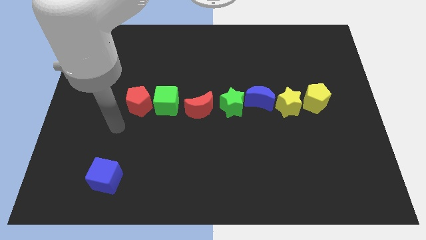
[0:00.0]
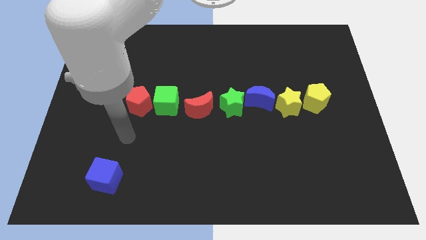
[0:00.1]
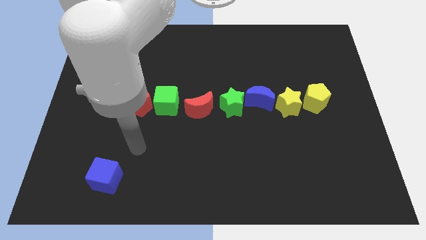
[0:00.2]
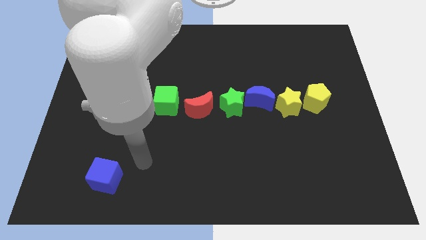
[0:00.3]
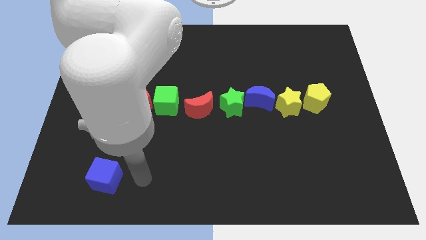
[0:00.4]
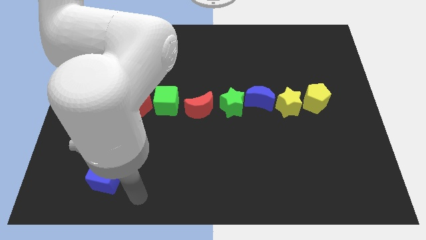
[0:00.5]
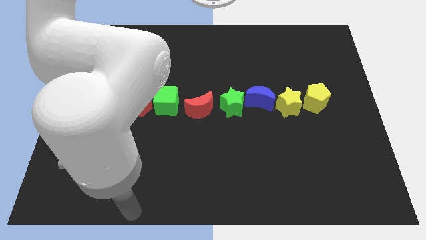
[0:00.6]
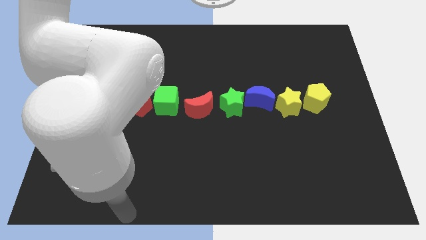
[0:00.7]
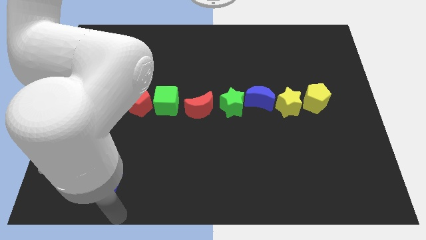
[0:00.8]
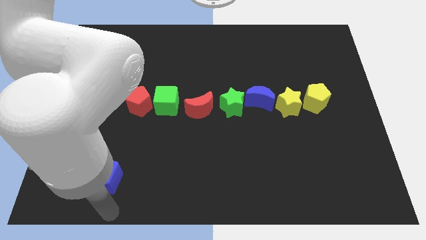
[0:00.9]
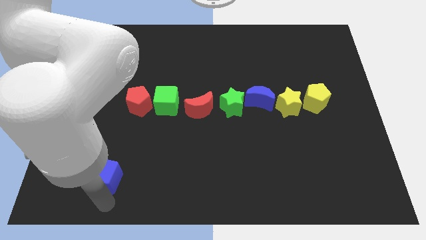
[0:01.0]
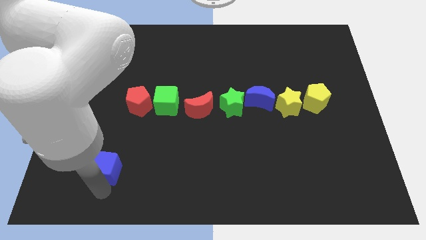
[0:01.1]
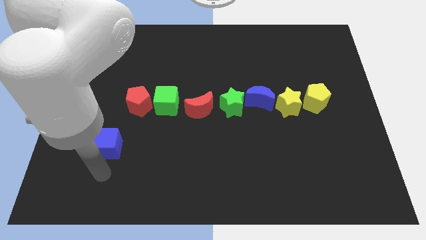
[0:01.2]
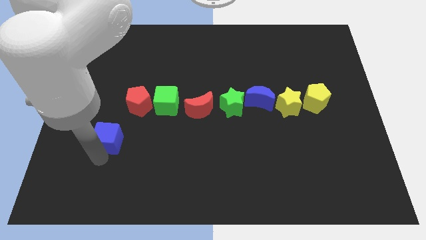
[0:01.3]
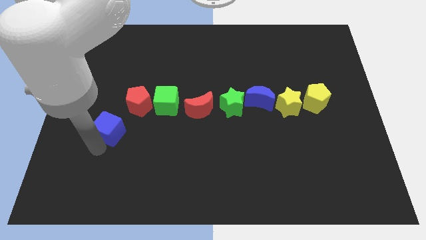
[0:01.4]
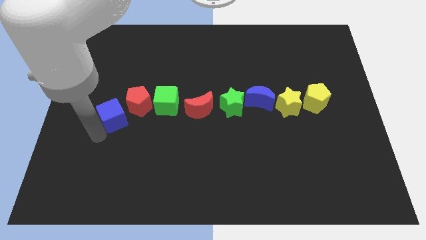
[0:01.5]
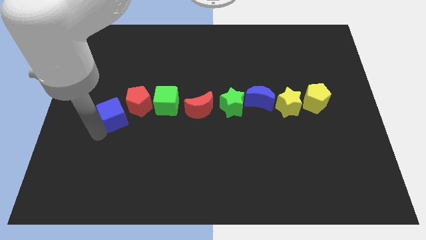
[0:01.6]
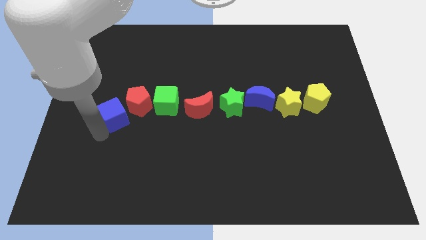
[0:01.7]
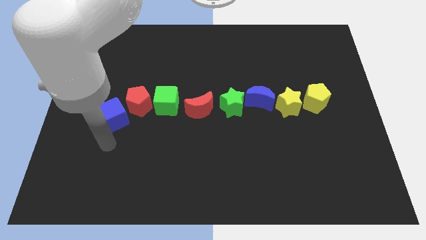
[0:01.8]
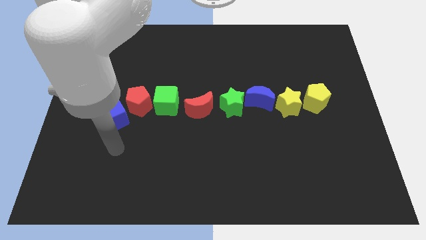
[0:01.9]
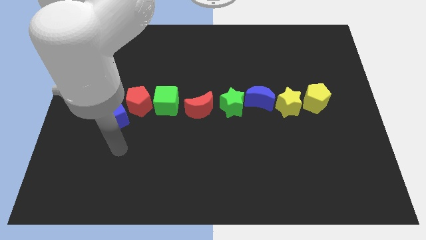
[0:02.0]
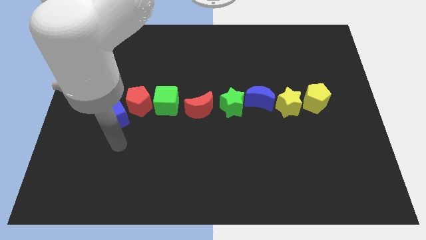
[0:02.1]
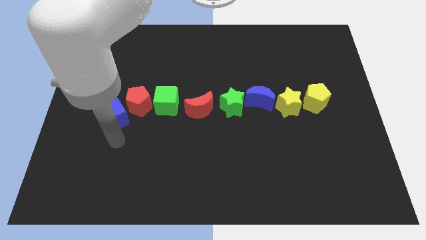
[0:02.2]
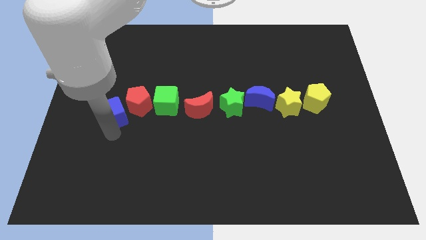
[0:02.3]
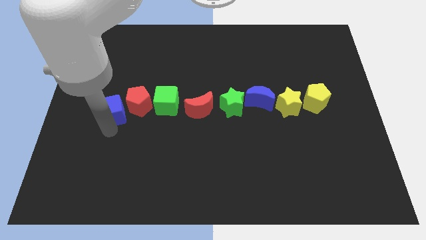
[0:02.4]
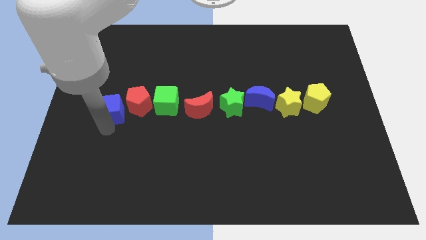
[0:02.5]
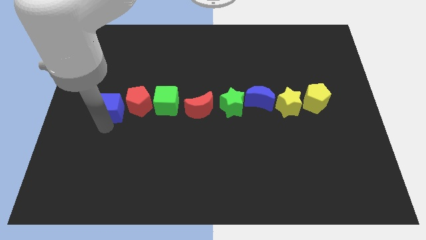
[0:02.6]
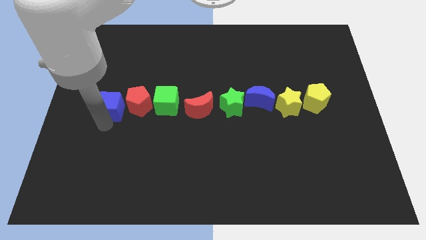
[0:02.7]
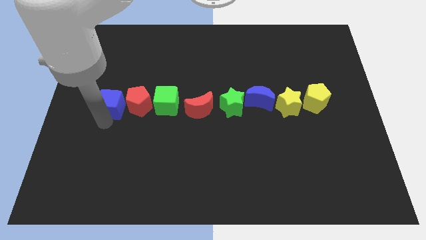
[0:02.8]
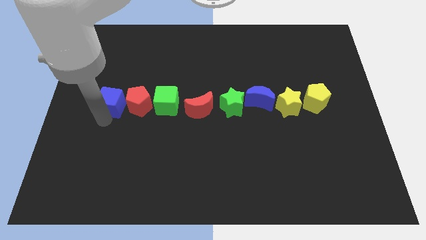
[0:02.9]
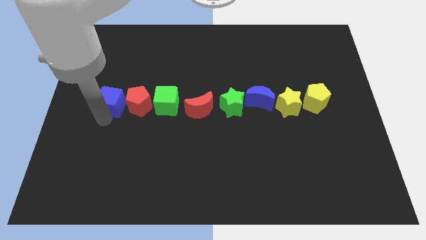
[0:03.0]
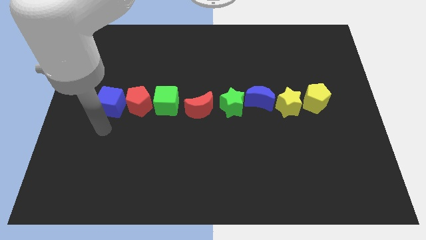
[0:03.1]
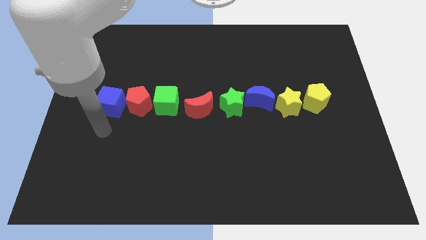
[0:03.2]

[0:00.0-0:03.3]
push blue cube beside red crescent

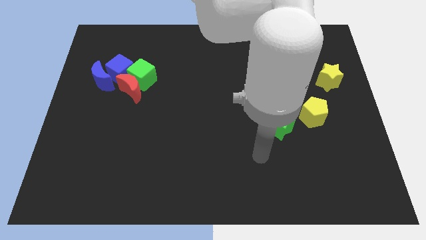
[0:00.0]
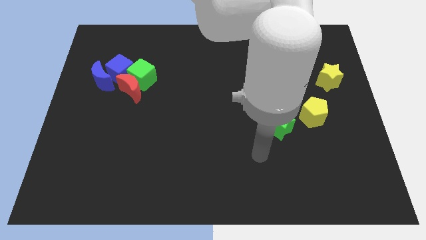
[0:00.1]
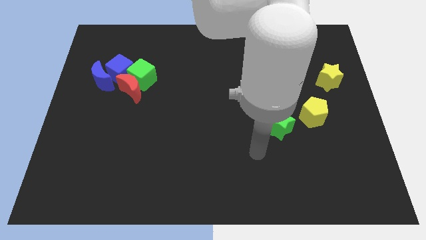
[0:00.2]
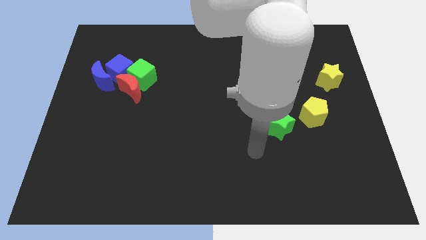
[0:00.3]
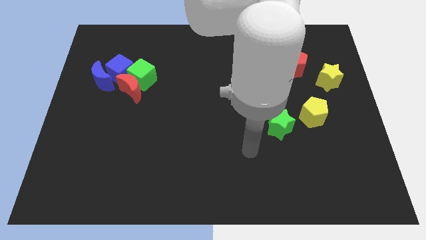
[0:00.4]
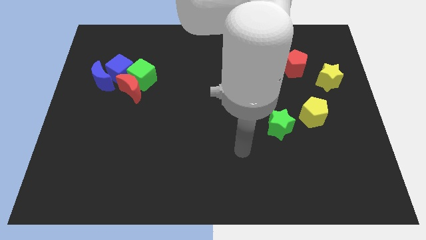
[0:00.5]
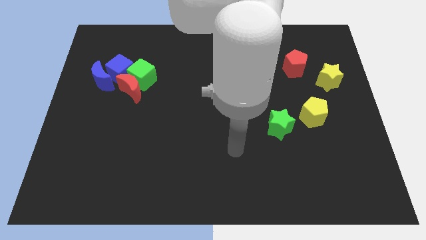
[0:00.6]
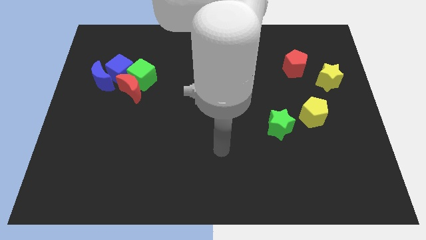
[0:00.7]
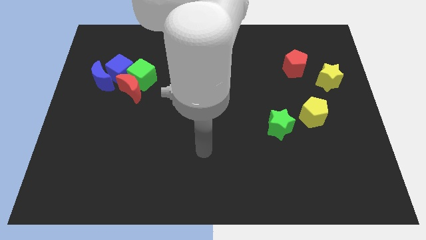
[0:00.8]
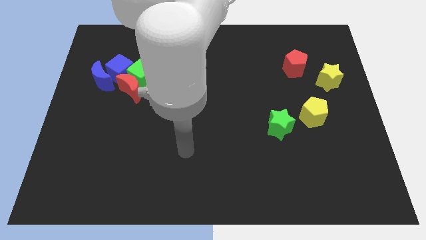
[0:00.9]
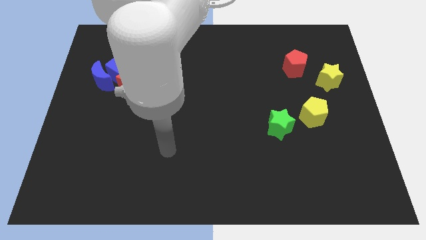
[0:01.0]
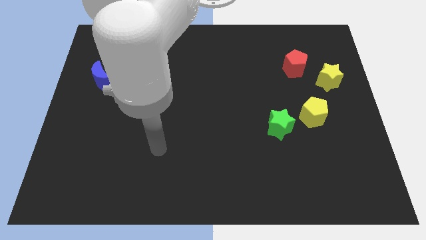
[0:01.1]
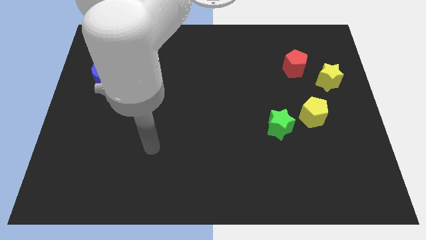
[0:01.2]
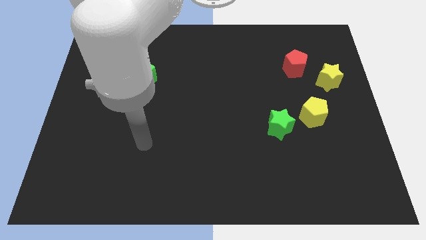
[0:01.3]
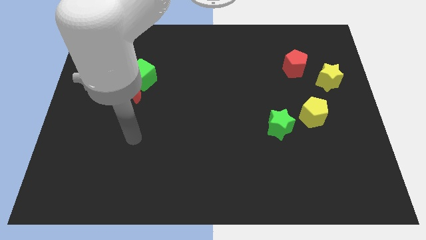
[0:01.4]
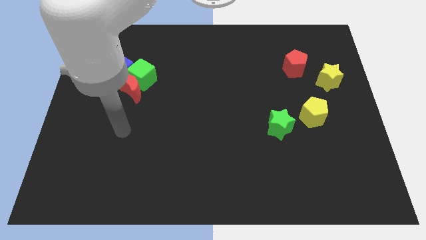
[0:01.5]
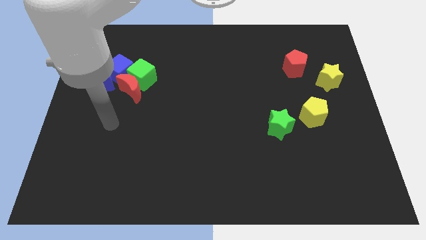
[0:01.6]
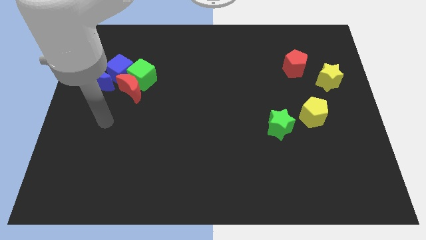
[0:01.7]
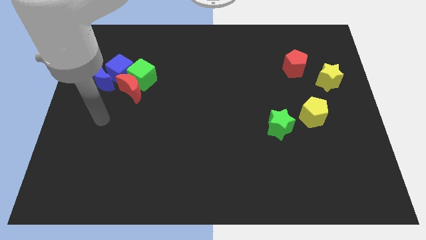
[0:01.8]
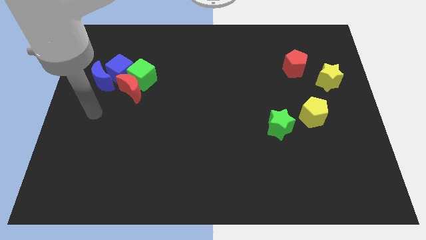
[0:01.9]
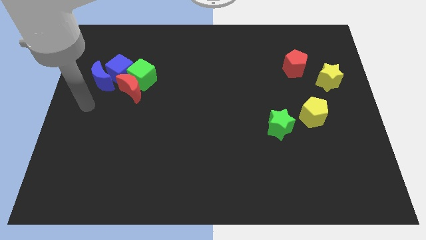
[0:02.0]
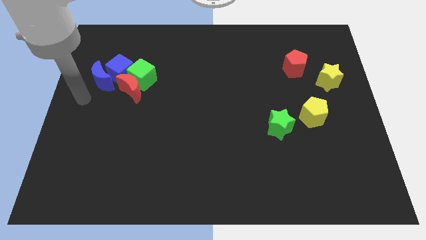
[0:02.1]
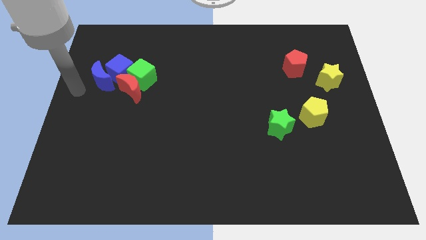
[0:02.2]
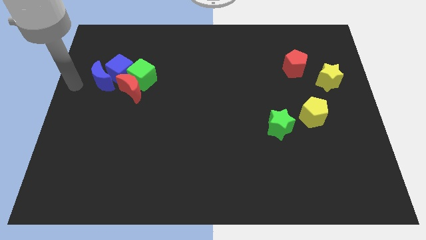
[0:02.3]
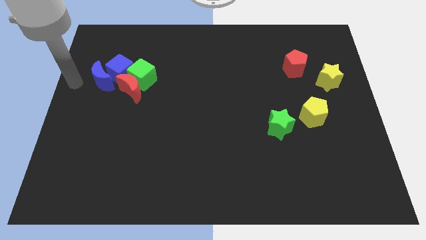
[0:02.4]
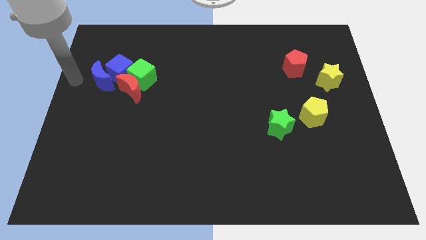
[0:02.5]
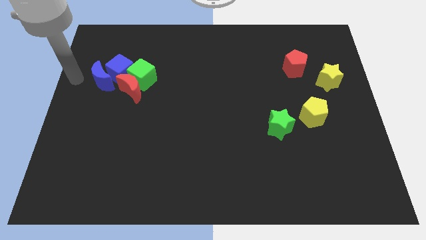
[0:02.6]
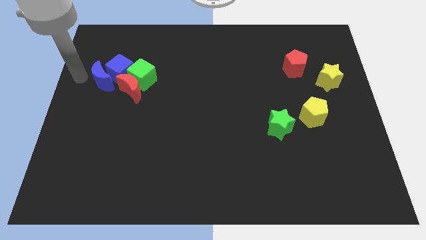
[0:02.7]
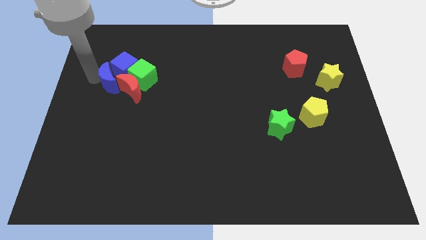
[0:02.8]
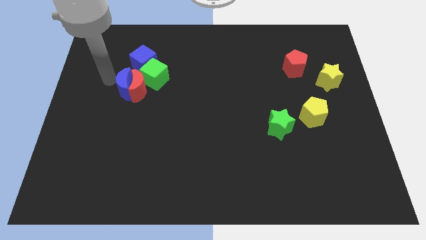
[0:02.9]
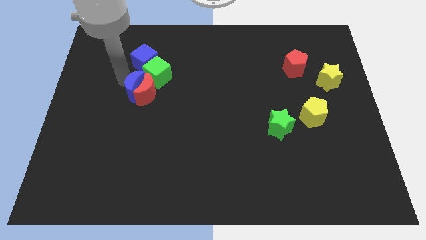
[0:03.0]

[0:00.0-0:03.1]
place the arm to the left of the blue moon

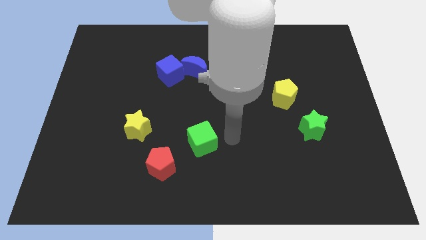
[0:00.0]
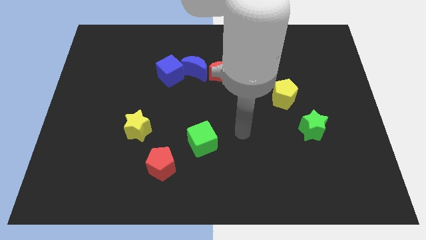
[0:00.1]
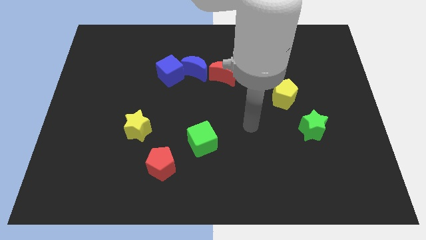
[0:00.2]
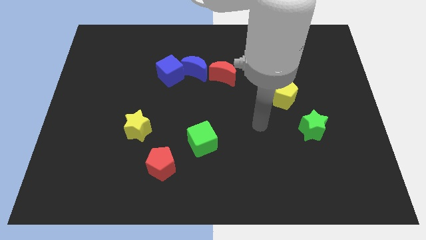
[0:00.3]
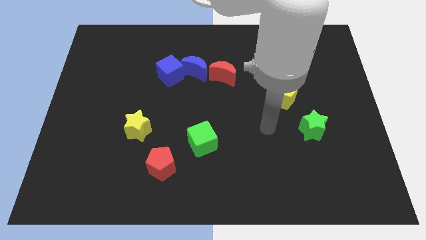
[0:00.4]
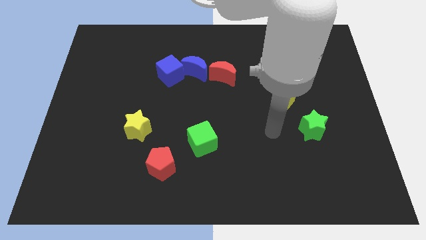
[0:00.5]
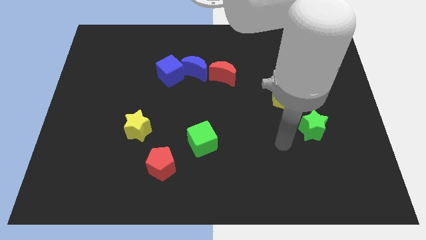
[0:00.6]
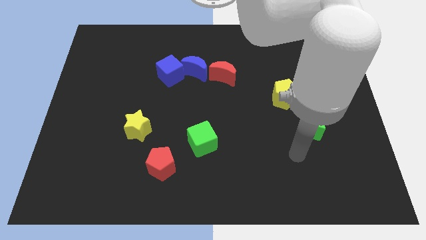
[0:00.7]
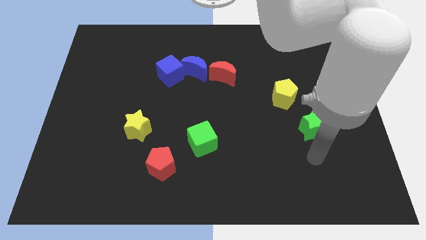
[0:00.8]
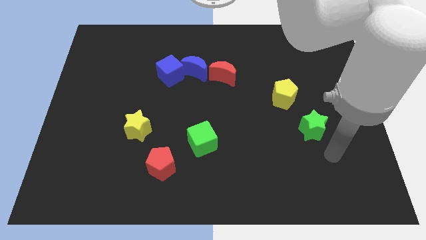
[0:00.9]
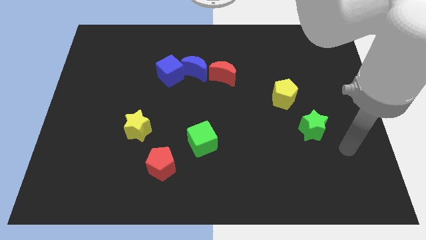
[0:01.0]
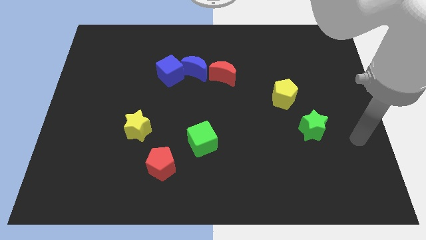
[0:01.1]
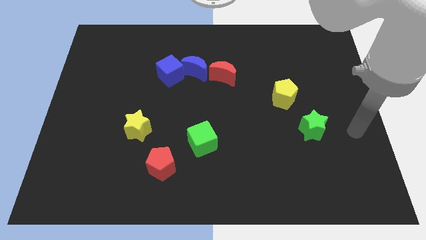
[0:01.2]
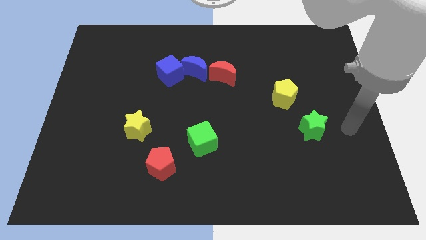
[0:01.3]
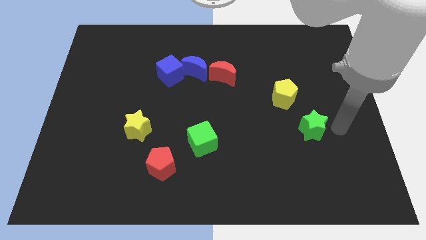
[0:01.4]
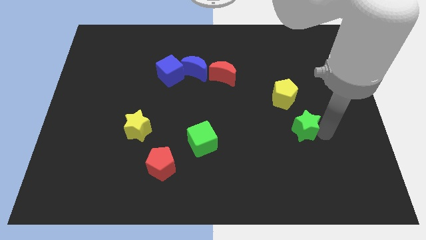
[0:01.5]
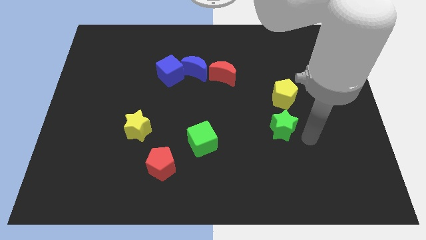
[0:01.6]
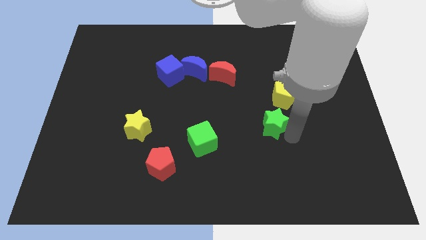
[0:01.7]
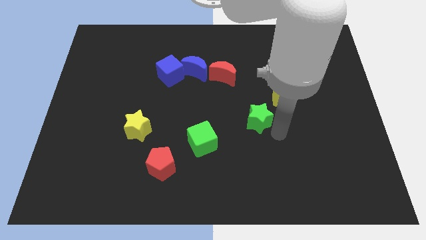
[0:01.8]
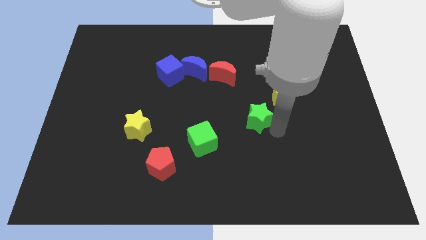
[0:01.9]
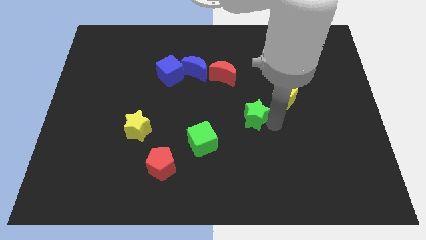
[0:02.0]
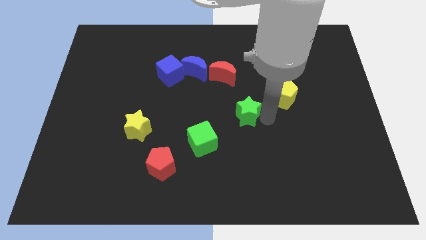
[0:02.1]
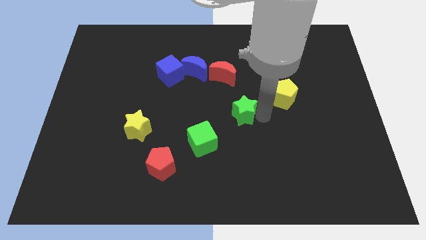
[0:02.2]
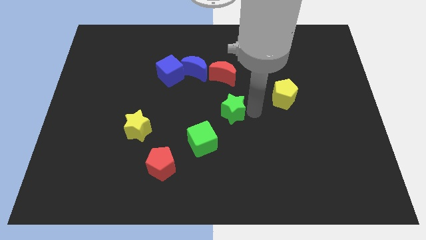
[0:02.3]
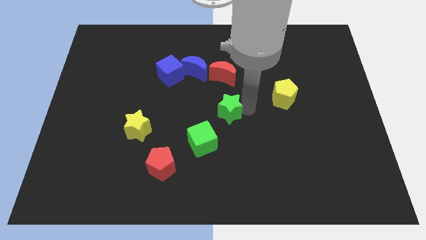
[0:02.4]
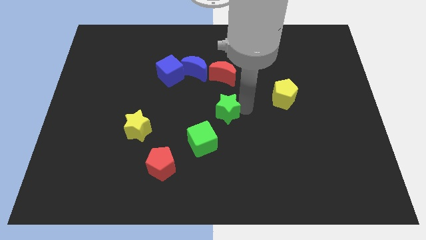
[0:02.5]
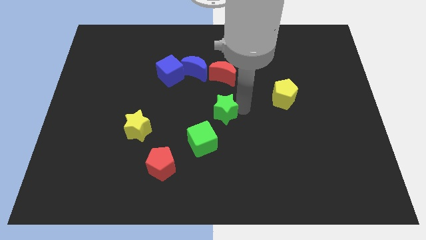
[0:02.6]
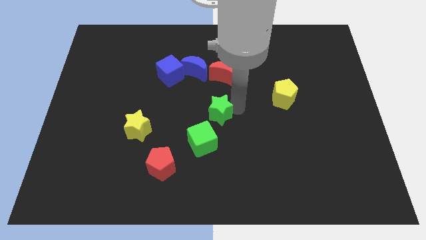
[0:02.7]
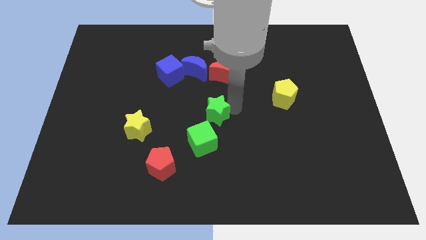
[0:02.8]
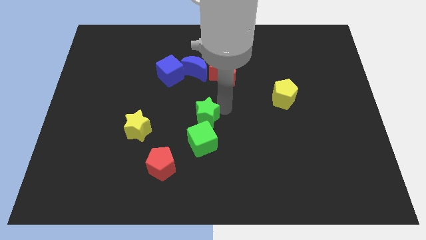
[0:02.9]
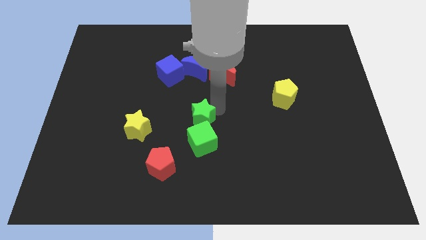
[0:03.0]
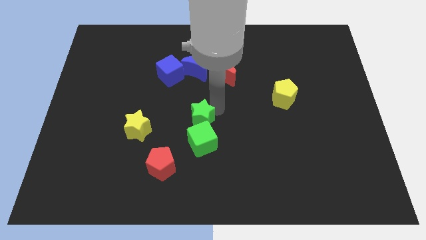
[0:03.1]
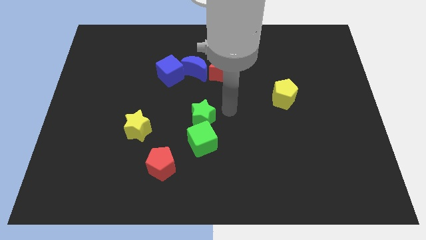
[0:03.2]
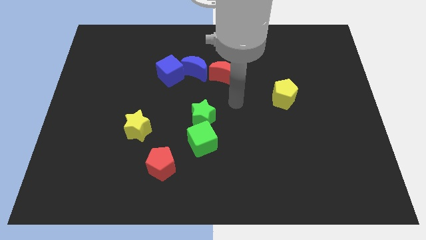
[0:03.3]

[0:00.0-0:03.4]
put the green star at the top of green cube
